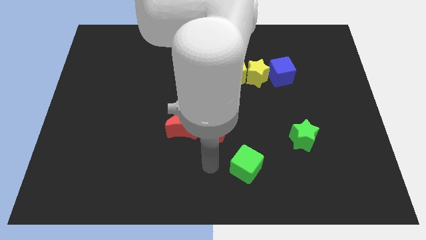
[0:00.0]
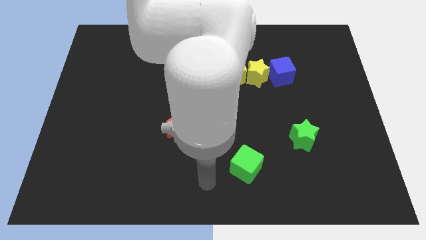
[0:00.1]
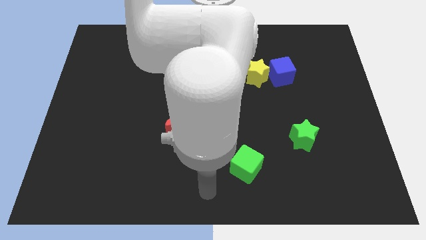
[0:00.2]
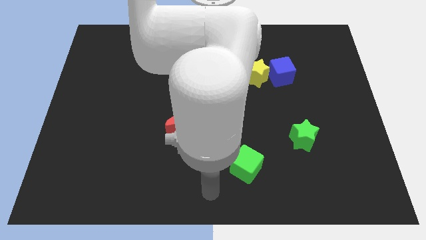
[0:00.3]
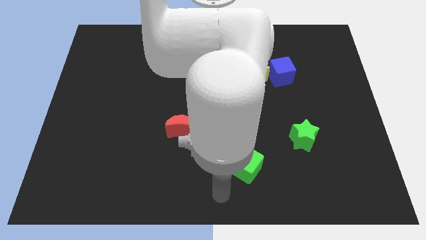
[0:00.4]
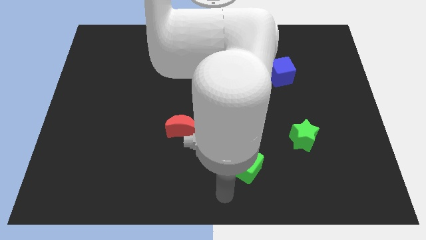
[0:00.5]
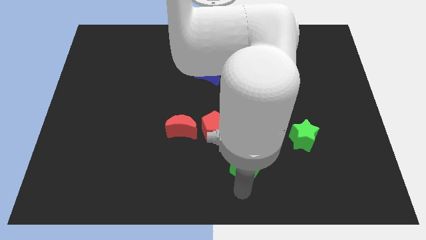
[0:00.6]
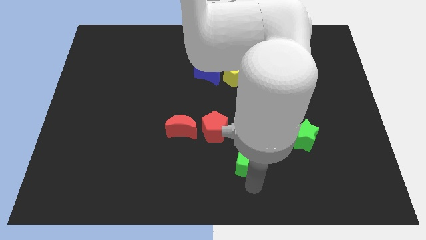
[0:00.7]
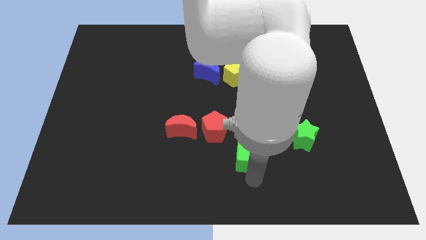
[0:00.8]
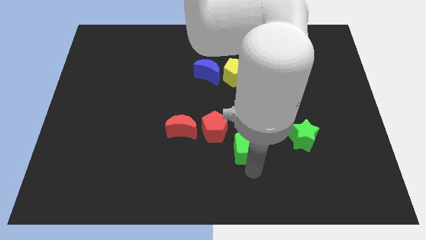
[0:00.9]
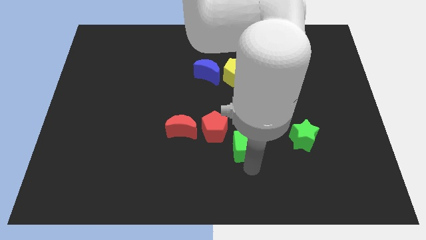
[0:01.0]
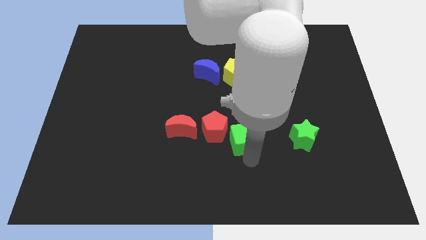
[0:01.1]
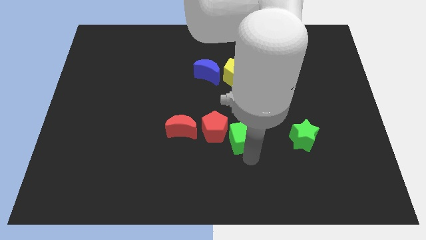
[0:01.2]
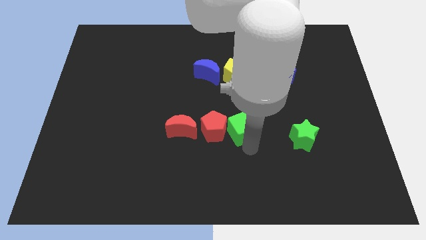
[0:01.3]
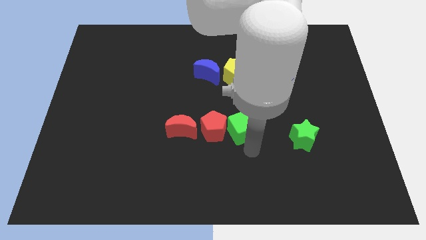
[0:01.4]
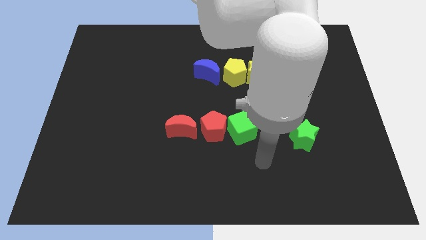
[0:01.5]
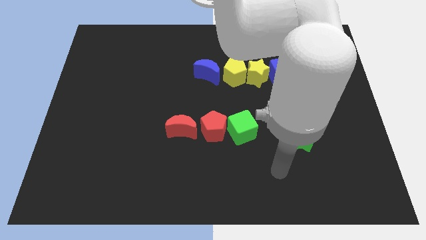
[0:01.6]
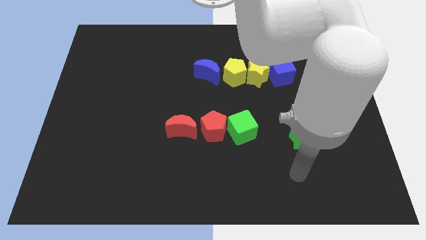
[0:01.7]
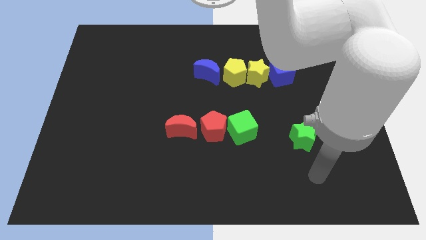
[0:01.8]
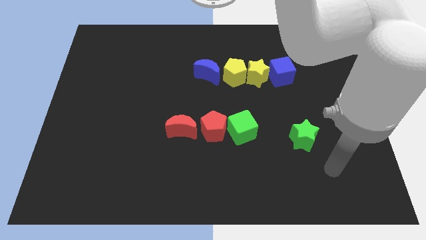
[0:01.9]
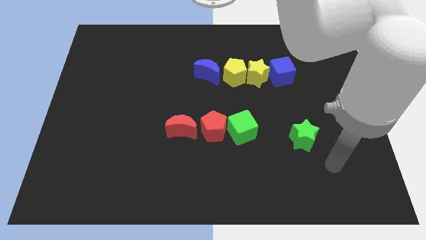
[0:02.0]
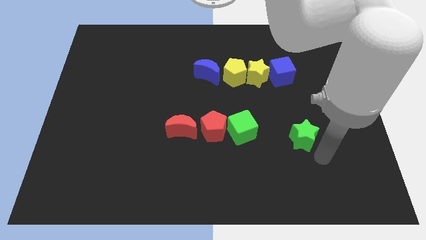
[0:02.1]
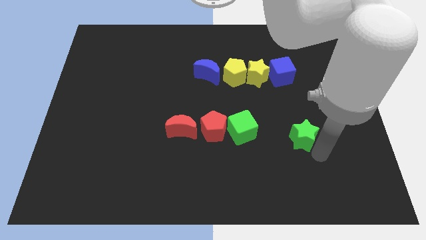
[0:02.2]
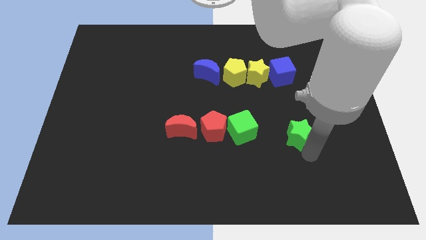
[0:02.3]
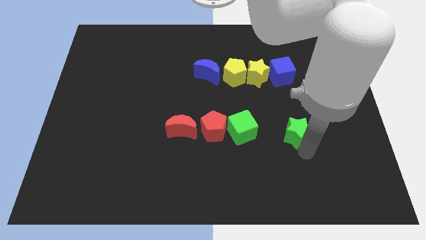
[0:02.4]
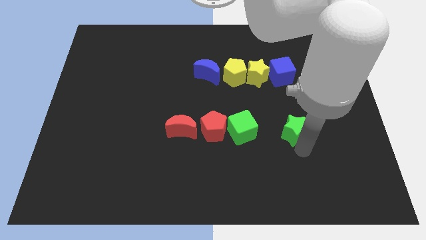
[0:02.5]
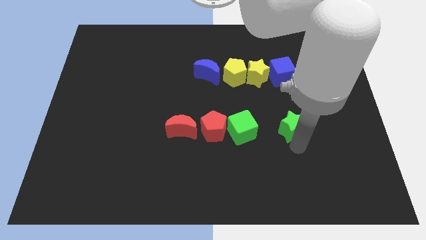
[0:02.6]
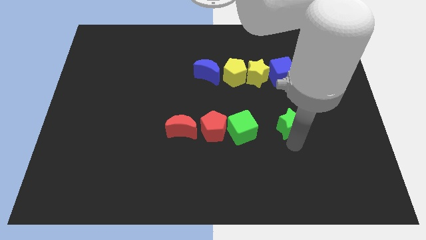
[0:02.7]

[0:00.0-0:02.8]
put the green cube to the right of the red pentagon

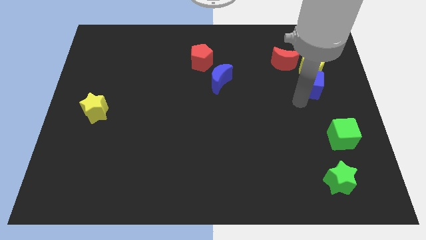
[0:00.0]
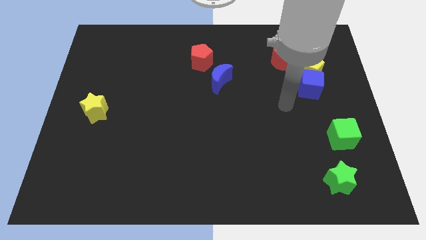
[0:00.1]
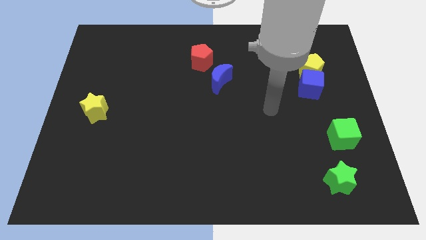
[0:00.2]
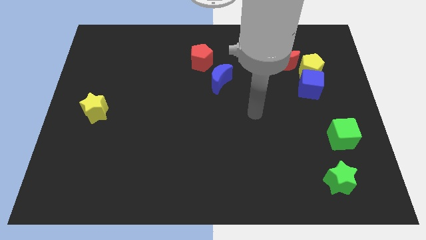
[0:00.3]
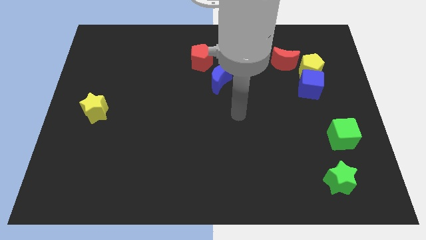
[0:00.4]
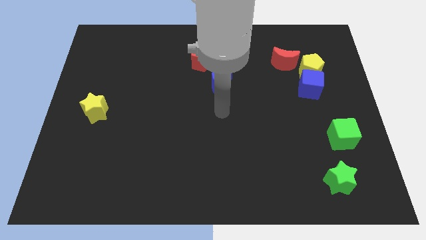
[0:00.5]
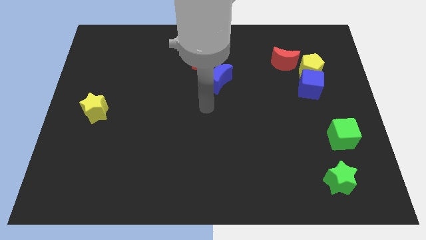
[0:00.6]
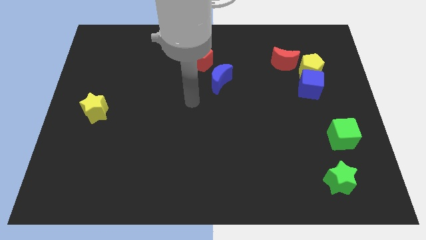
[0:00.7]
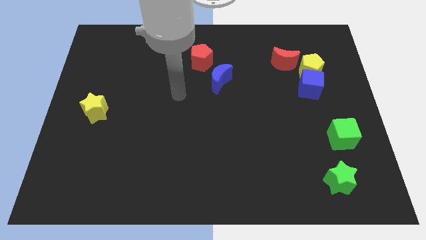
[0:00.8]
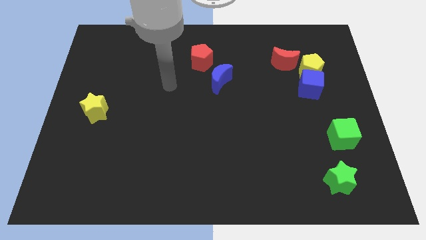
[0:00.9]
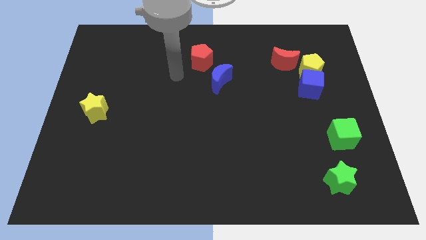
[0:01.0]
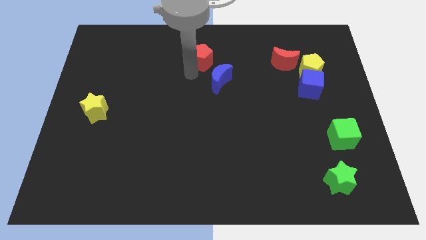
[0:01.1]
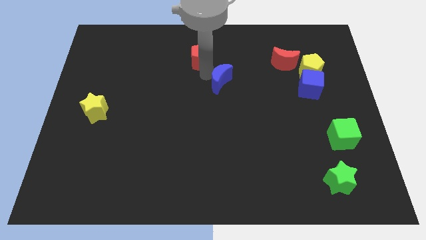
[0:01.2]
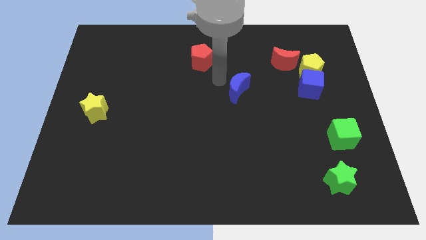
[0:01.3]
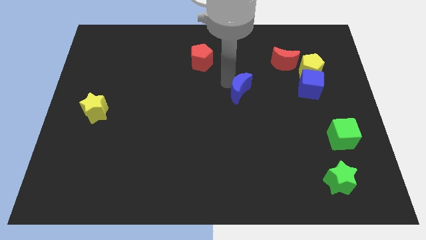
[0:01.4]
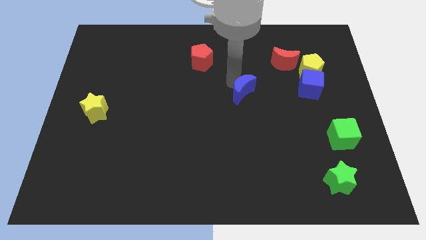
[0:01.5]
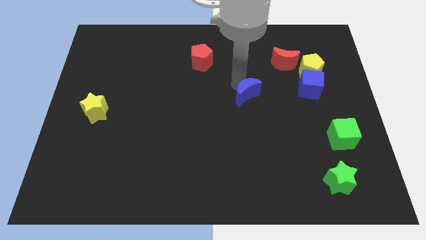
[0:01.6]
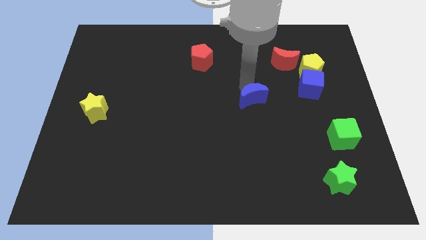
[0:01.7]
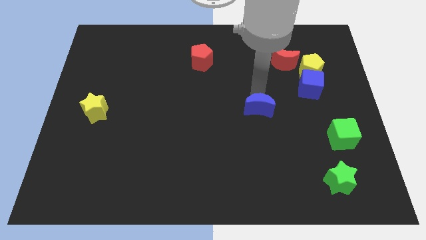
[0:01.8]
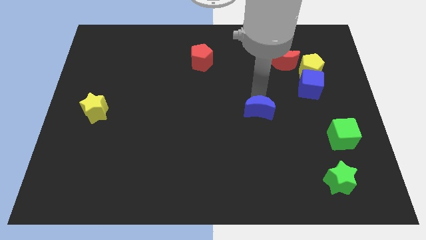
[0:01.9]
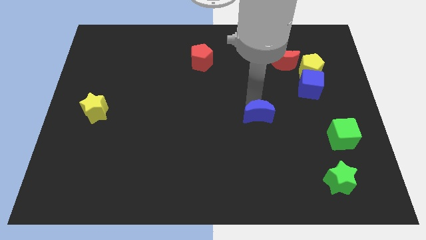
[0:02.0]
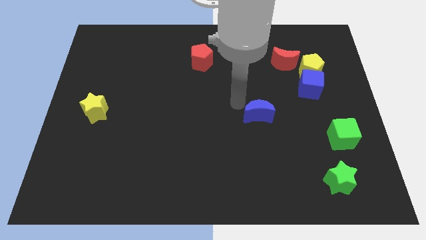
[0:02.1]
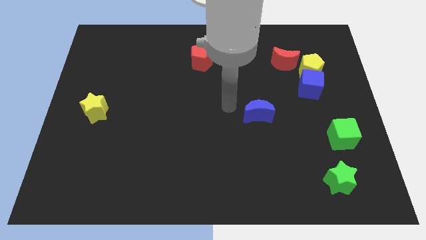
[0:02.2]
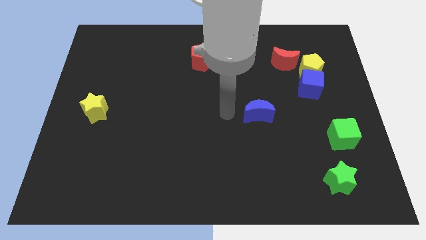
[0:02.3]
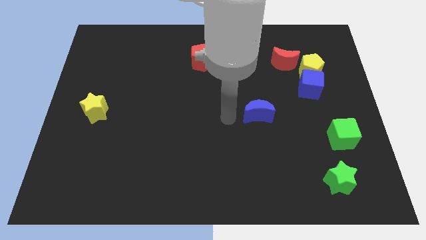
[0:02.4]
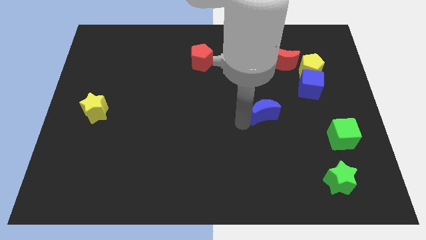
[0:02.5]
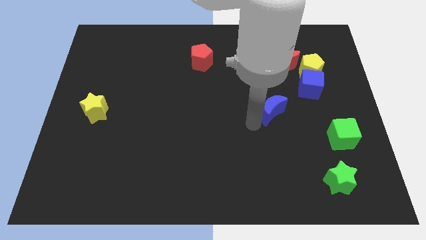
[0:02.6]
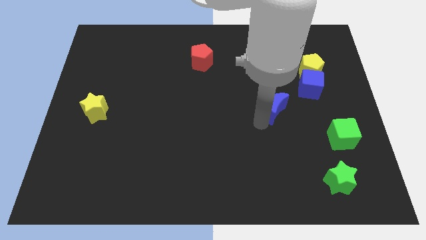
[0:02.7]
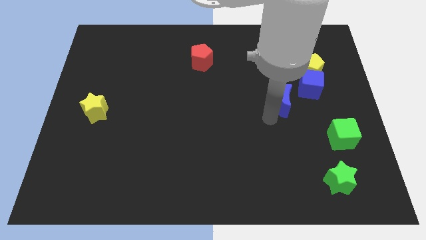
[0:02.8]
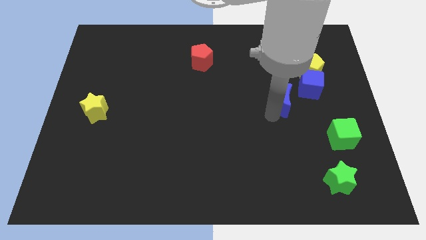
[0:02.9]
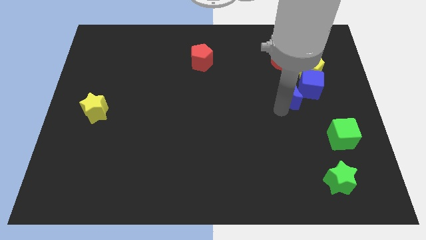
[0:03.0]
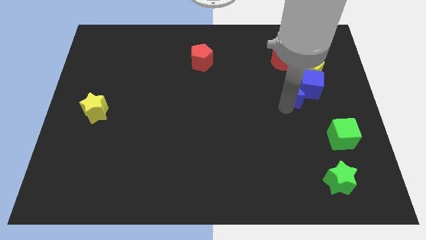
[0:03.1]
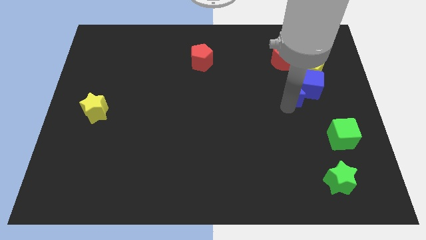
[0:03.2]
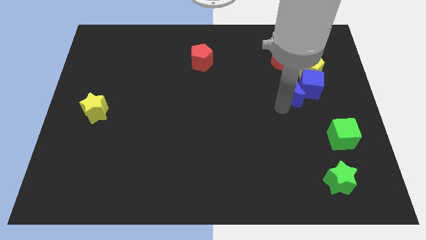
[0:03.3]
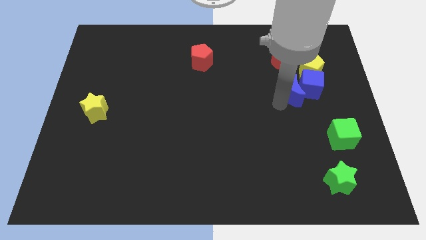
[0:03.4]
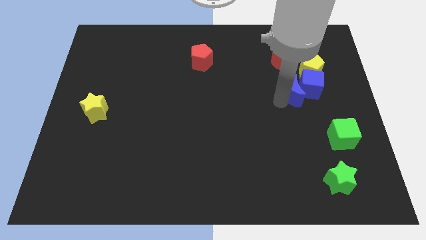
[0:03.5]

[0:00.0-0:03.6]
move the blue crescent to the left of the blue cube

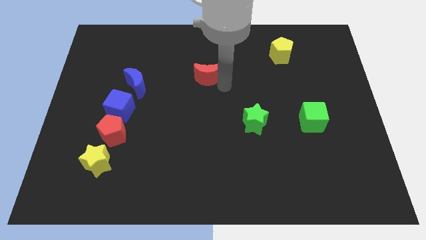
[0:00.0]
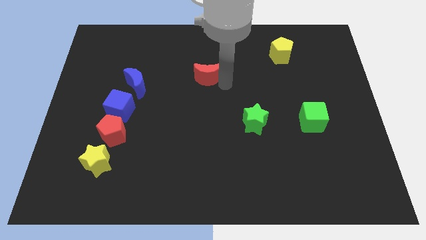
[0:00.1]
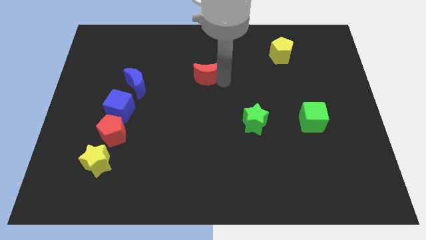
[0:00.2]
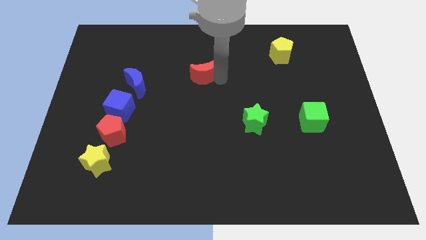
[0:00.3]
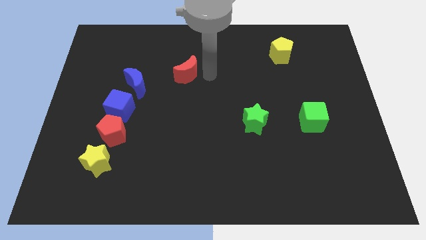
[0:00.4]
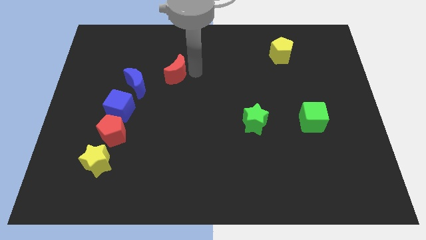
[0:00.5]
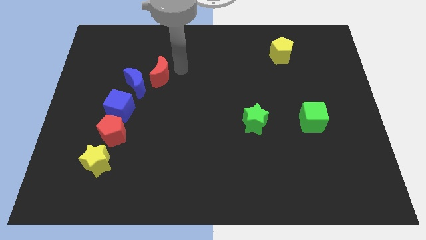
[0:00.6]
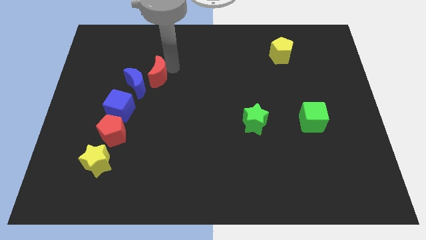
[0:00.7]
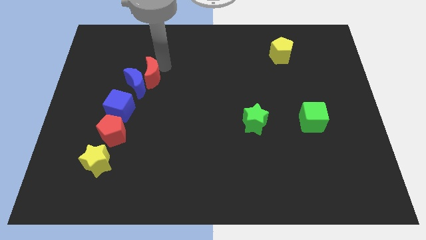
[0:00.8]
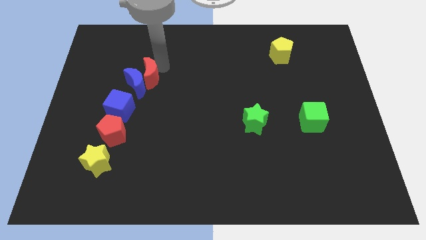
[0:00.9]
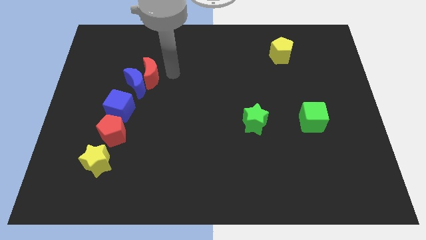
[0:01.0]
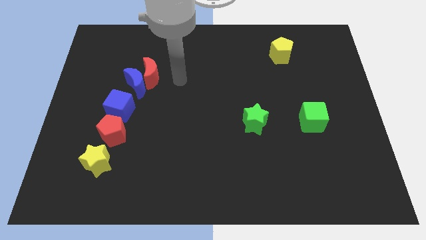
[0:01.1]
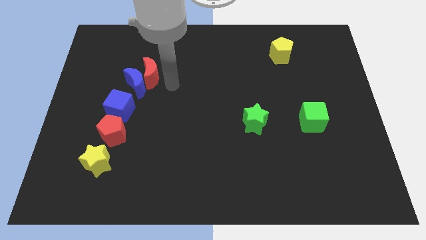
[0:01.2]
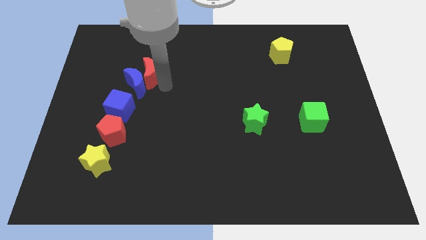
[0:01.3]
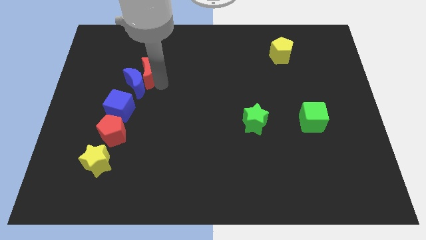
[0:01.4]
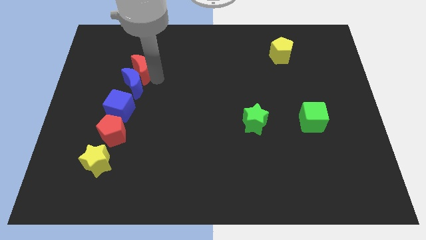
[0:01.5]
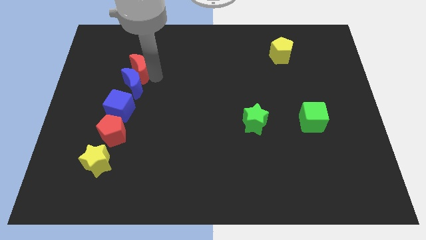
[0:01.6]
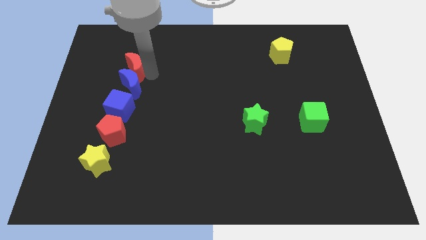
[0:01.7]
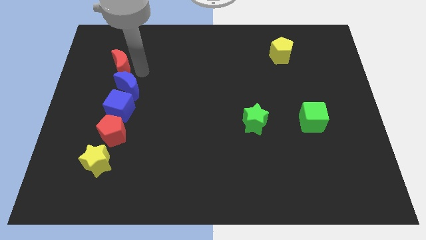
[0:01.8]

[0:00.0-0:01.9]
move red moon above blue moon

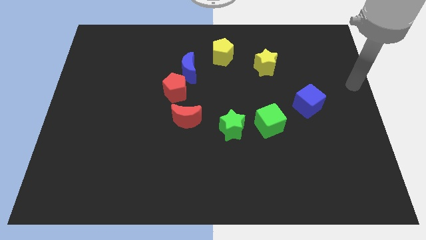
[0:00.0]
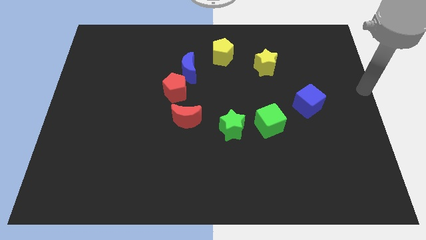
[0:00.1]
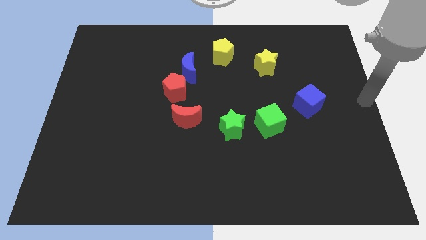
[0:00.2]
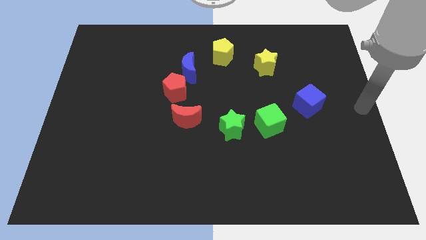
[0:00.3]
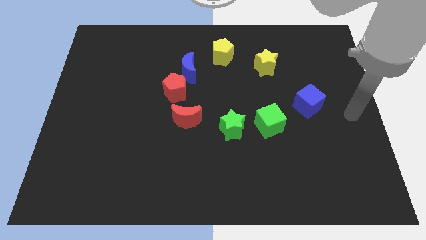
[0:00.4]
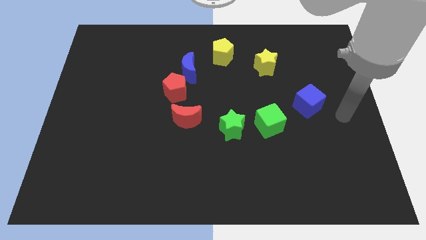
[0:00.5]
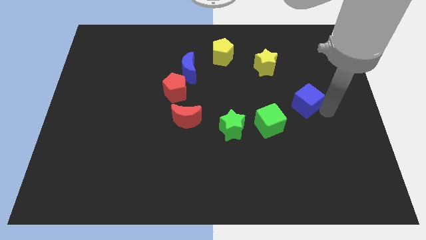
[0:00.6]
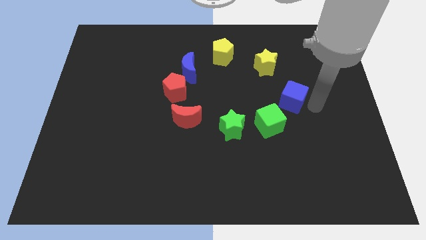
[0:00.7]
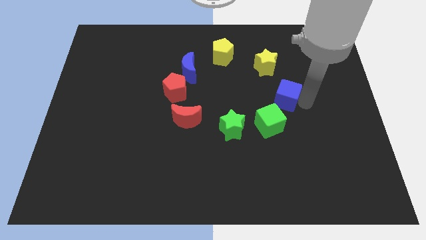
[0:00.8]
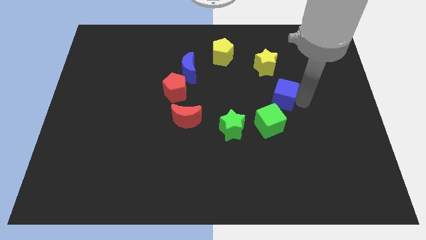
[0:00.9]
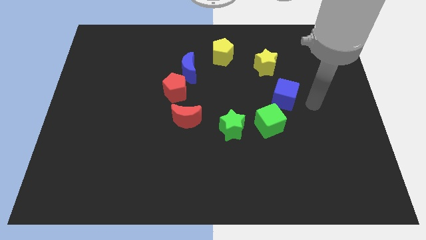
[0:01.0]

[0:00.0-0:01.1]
push the blue cube slightly on the left side
